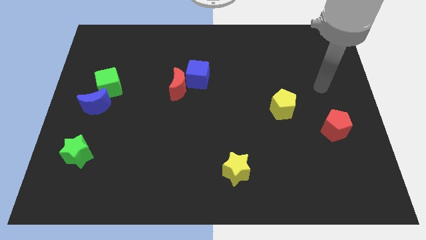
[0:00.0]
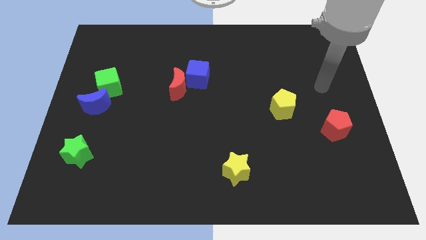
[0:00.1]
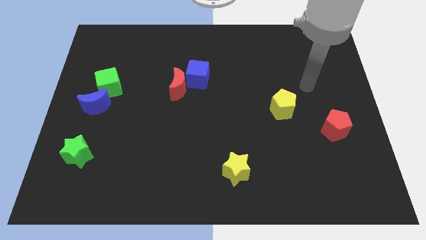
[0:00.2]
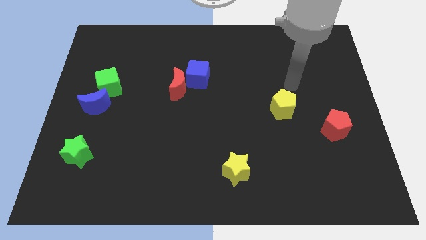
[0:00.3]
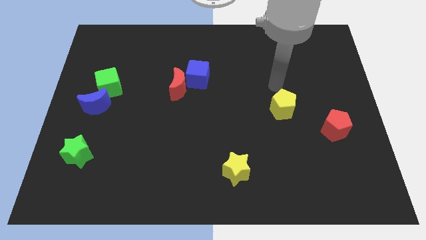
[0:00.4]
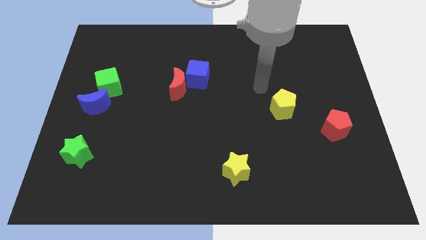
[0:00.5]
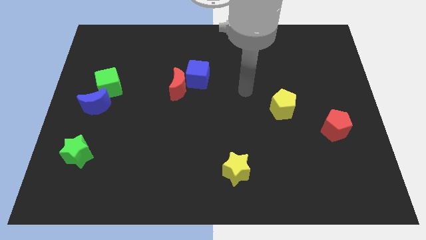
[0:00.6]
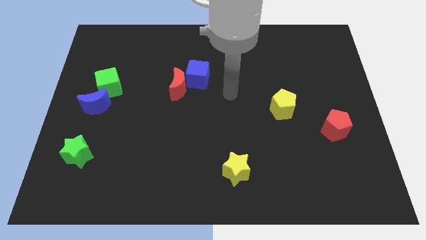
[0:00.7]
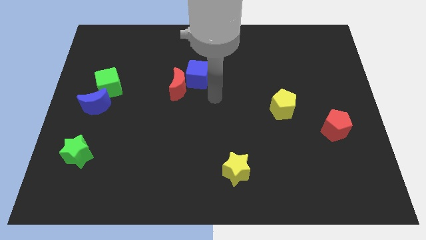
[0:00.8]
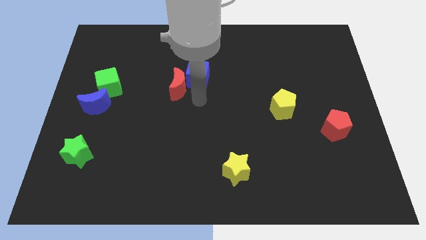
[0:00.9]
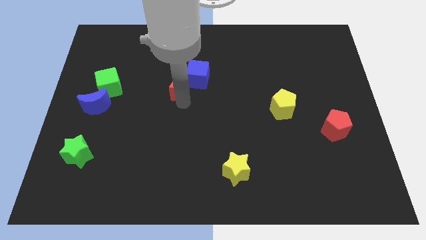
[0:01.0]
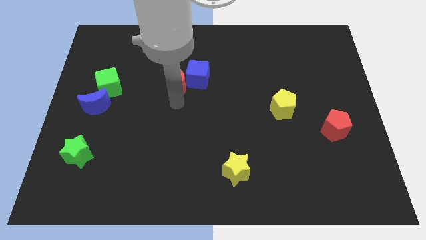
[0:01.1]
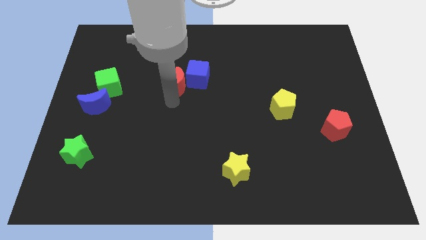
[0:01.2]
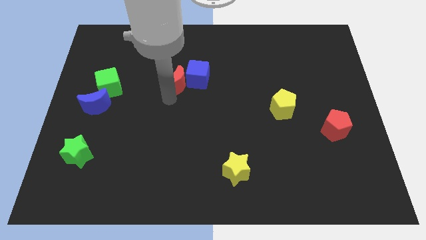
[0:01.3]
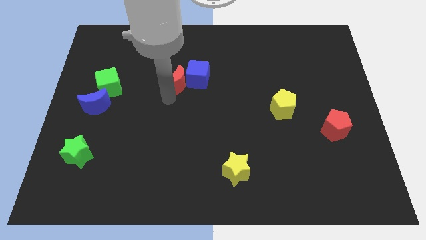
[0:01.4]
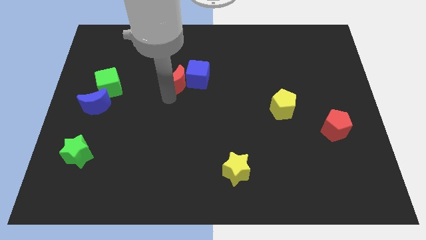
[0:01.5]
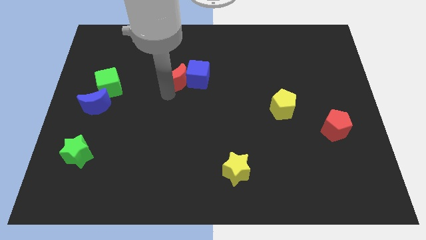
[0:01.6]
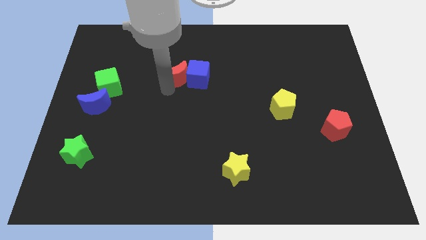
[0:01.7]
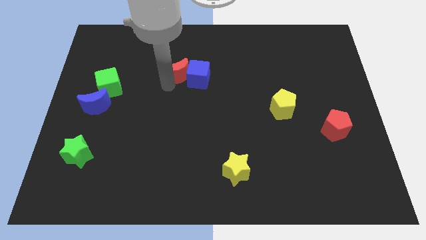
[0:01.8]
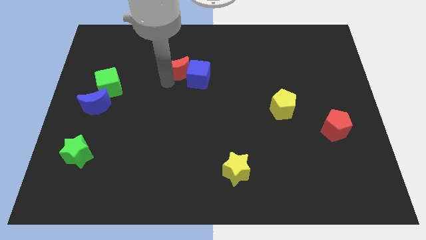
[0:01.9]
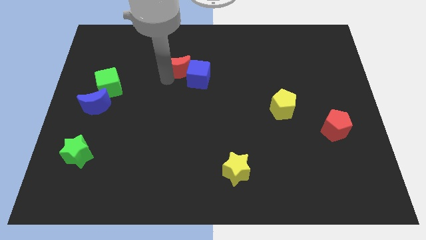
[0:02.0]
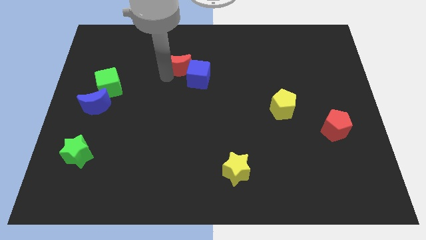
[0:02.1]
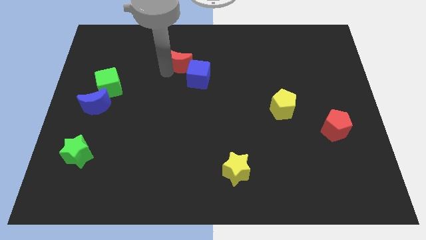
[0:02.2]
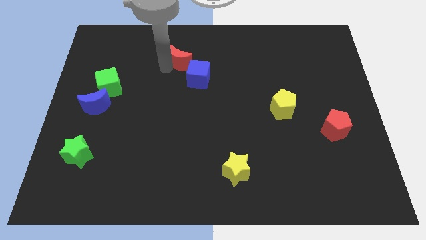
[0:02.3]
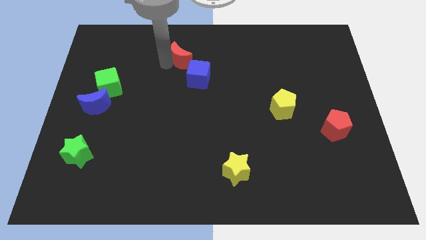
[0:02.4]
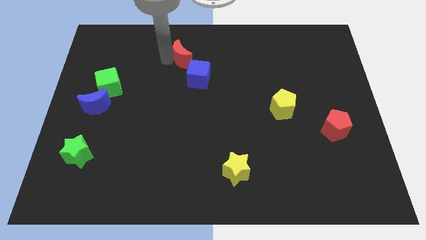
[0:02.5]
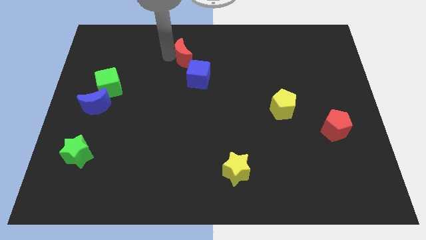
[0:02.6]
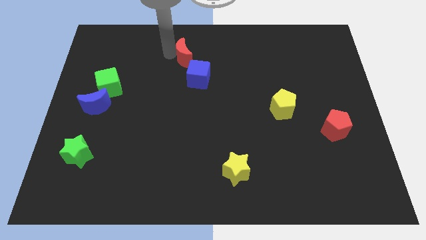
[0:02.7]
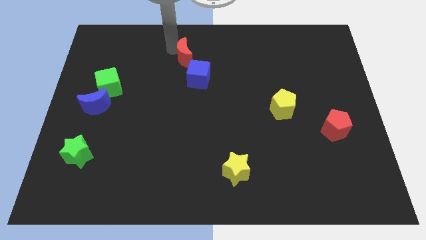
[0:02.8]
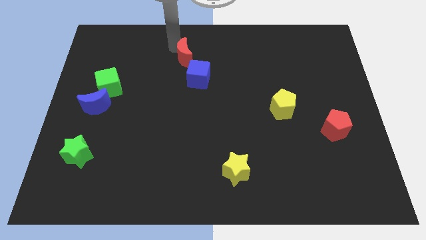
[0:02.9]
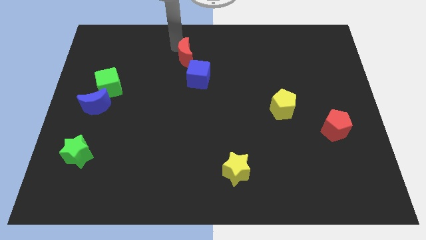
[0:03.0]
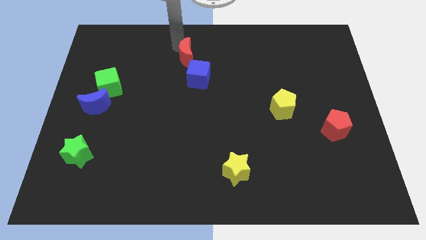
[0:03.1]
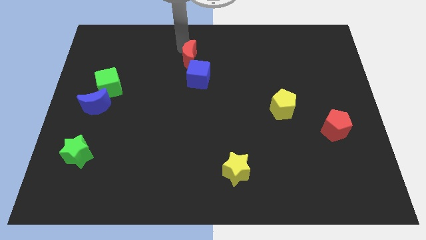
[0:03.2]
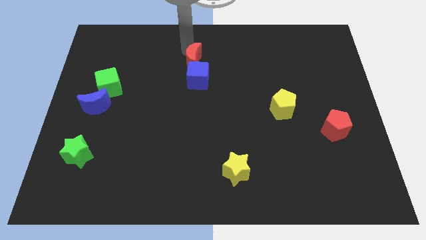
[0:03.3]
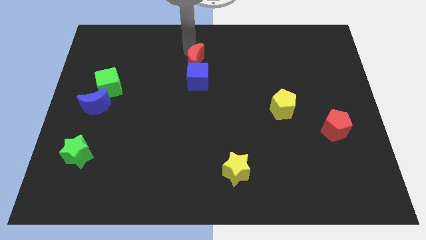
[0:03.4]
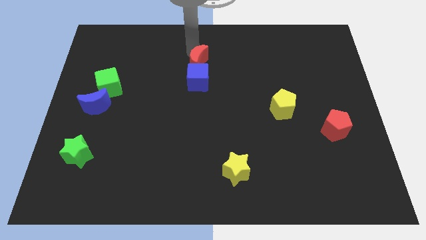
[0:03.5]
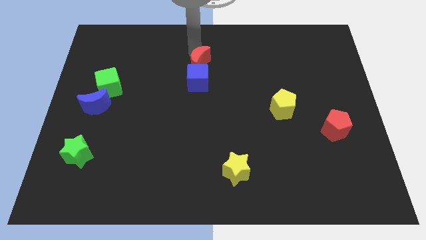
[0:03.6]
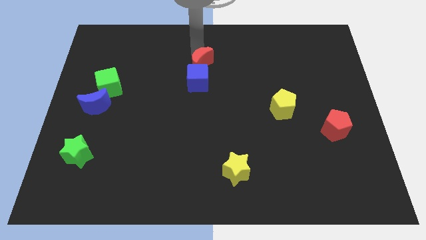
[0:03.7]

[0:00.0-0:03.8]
move the red crescent above the blue cube

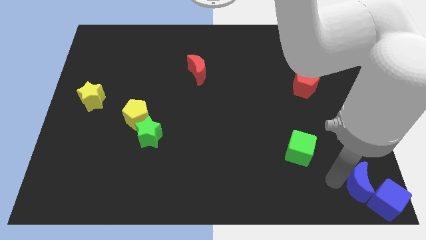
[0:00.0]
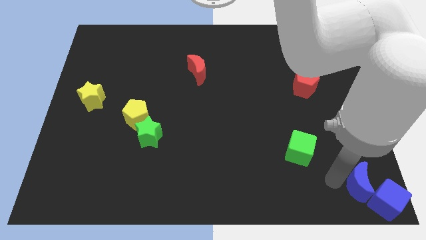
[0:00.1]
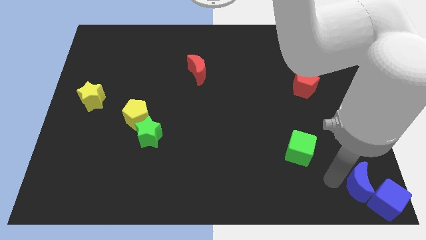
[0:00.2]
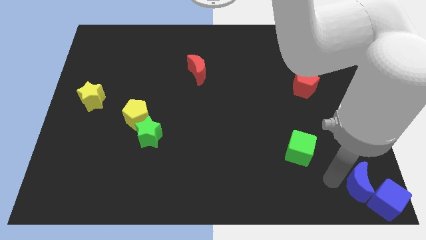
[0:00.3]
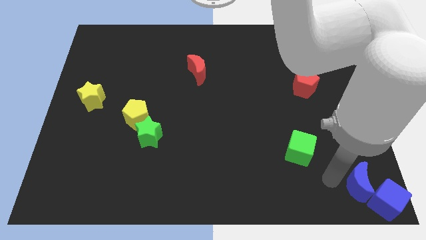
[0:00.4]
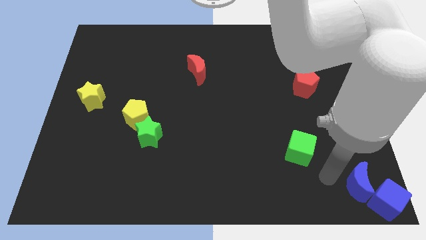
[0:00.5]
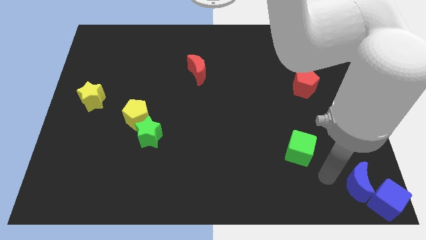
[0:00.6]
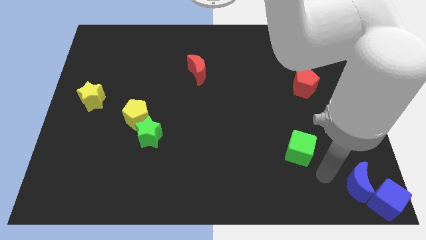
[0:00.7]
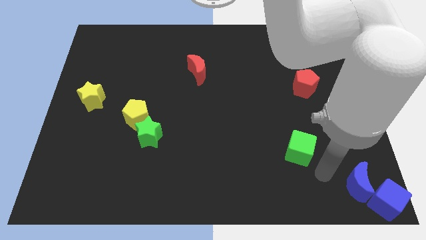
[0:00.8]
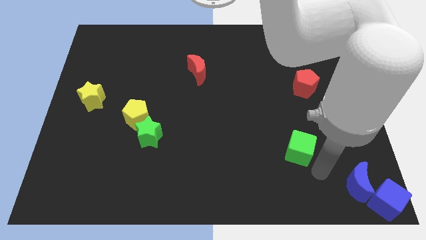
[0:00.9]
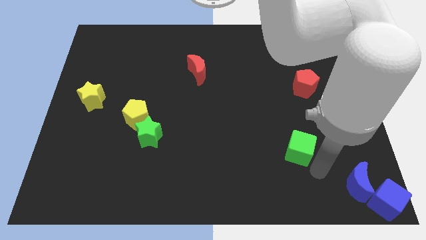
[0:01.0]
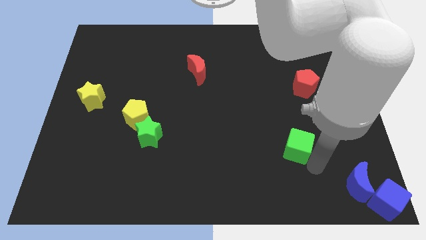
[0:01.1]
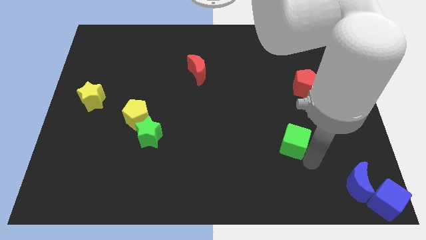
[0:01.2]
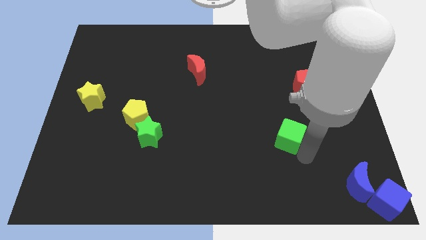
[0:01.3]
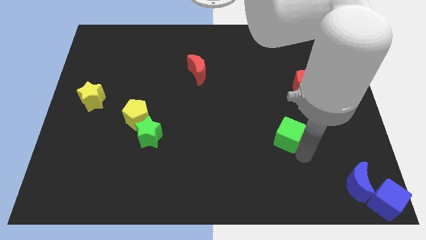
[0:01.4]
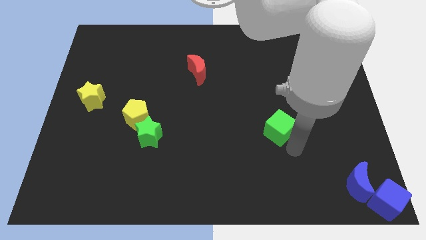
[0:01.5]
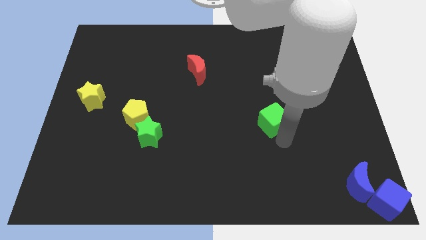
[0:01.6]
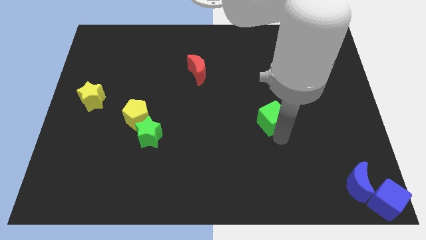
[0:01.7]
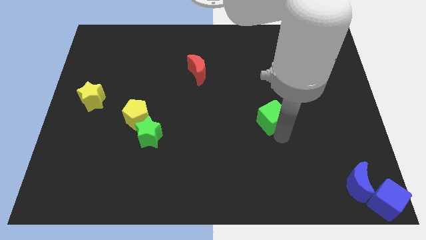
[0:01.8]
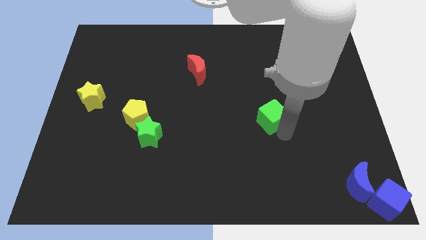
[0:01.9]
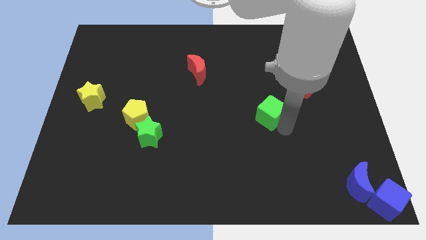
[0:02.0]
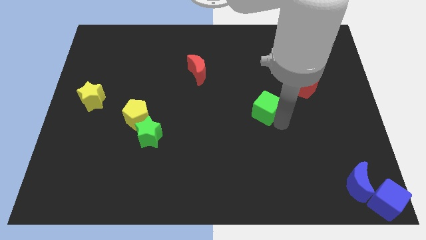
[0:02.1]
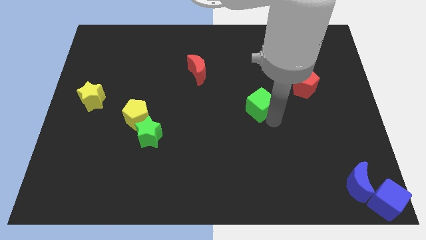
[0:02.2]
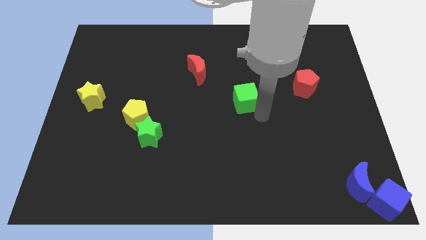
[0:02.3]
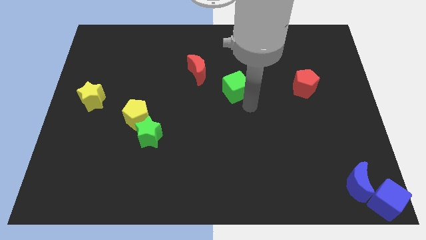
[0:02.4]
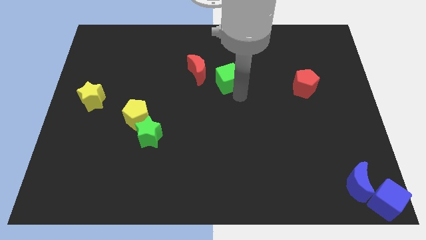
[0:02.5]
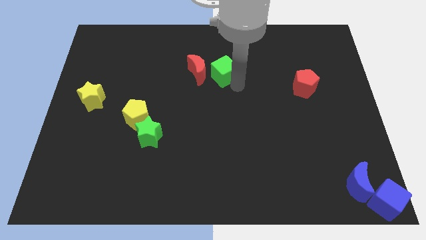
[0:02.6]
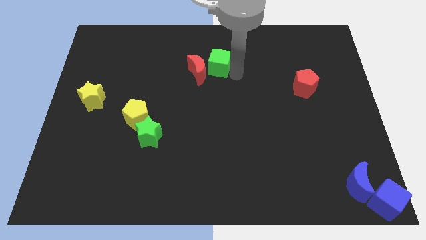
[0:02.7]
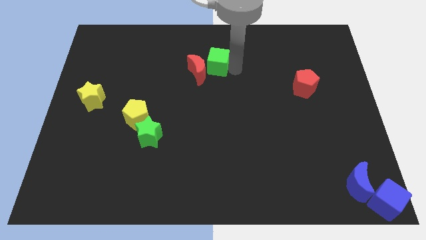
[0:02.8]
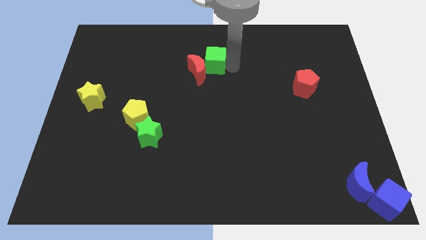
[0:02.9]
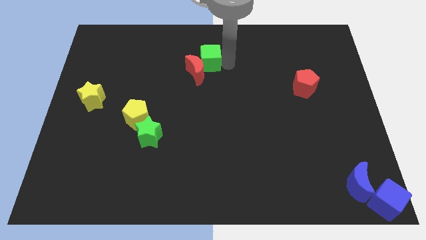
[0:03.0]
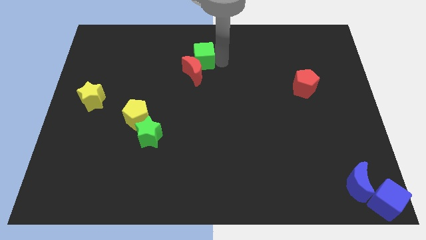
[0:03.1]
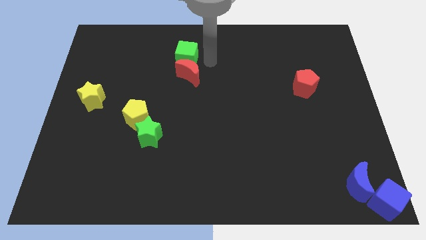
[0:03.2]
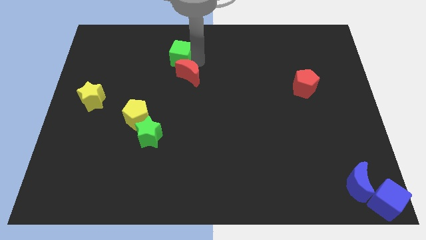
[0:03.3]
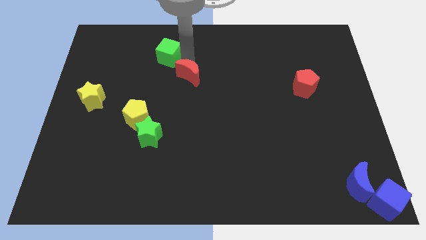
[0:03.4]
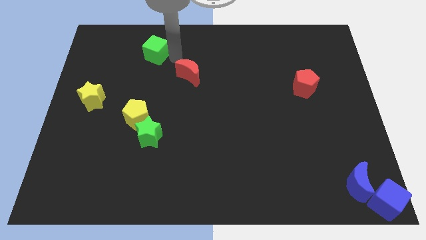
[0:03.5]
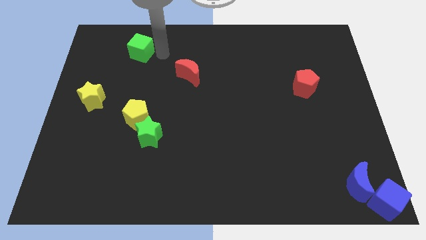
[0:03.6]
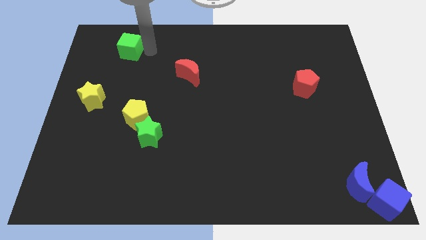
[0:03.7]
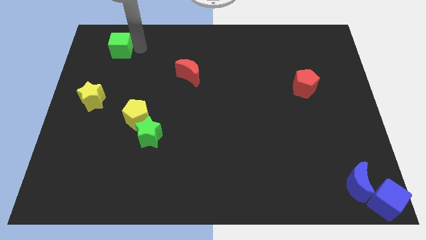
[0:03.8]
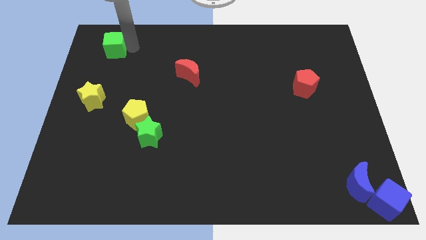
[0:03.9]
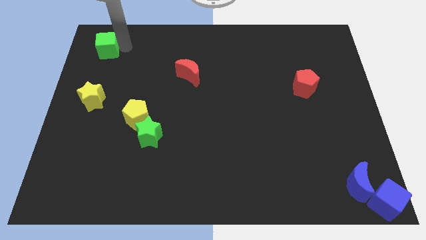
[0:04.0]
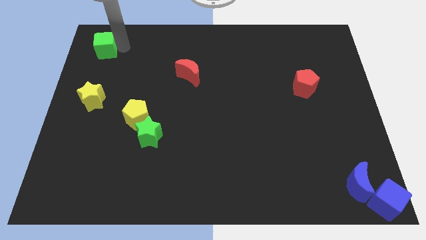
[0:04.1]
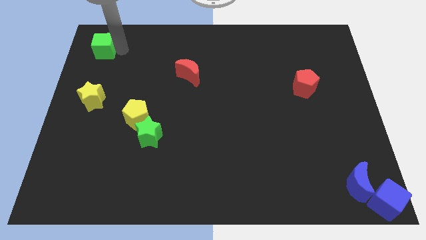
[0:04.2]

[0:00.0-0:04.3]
place green cube above yellow star

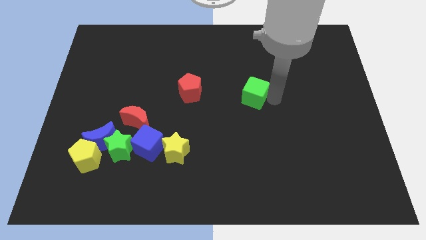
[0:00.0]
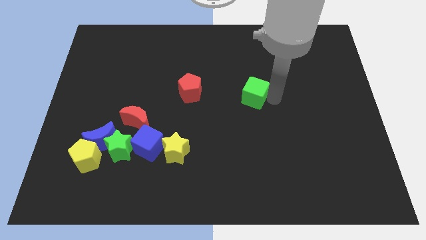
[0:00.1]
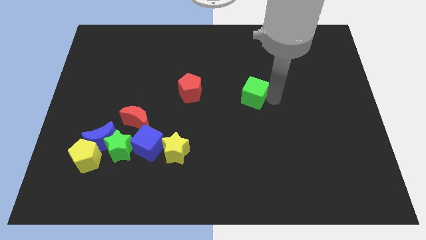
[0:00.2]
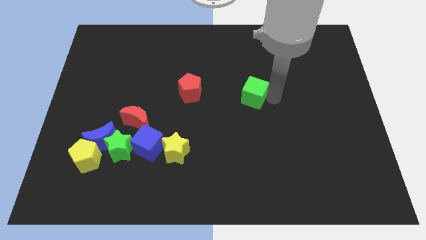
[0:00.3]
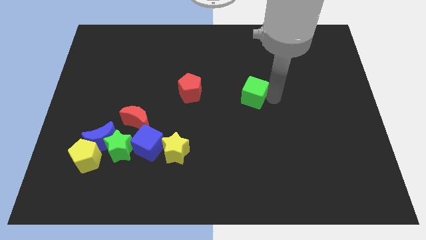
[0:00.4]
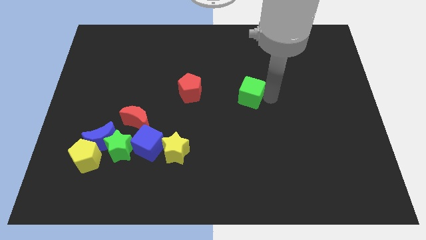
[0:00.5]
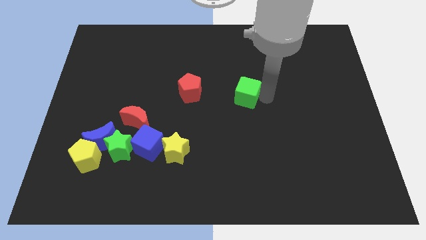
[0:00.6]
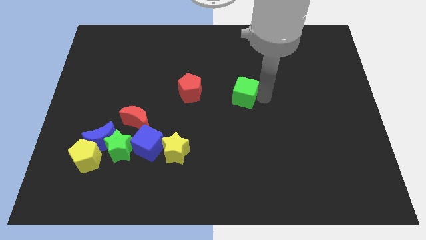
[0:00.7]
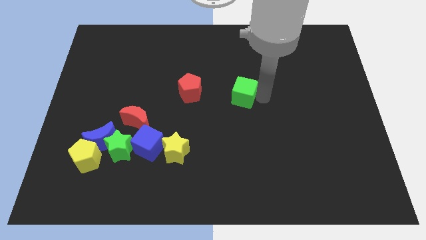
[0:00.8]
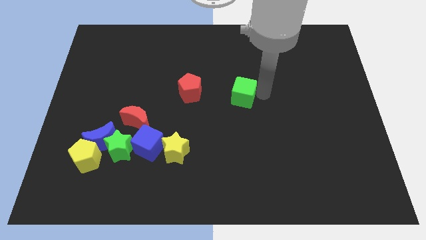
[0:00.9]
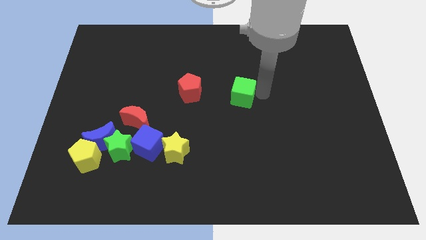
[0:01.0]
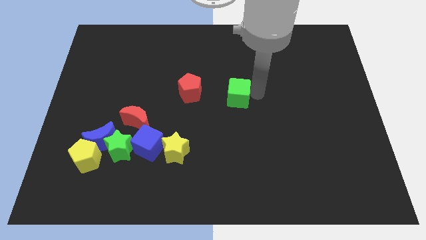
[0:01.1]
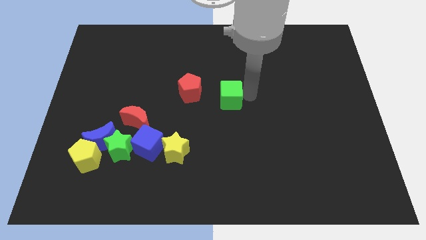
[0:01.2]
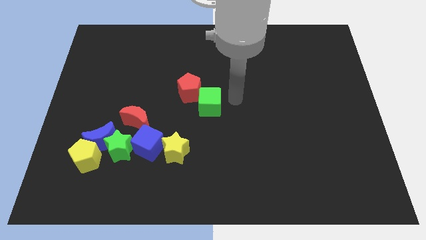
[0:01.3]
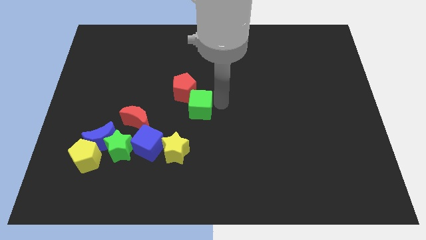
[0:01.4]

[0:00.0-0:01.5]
push the green cube into the bottom right side of the red pentagon
